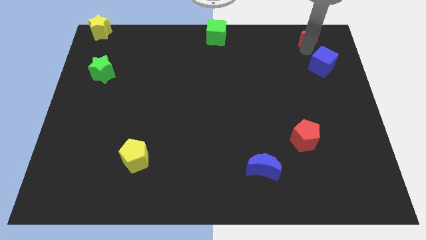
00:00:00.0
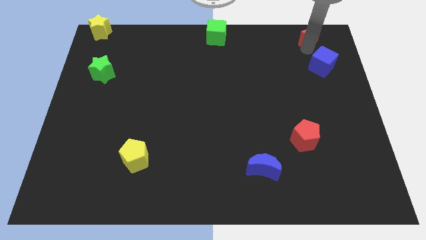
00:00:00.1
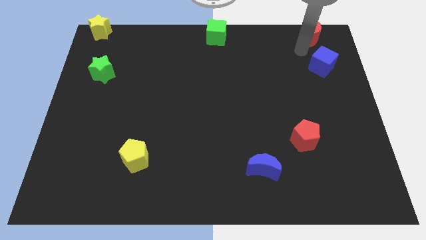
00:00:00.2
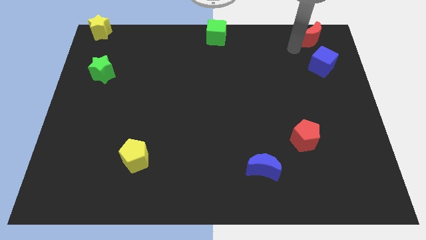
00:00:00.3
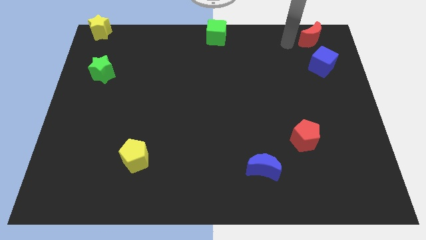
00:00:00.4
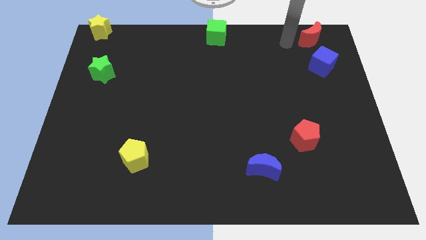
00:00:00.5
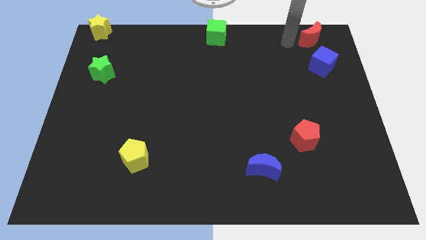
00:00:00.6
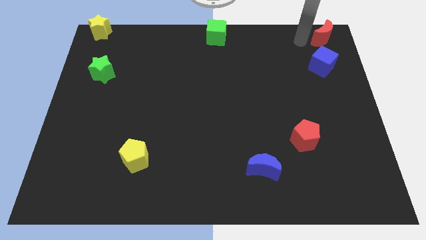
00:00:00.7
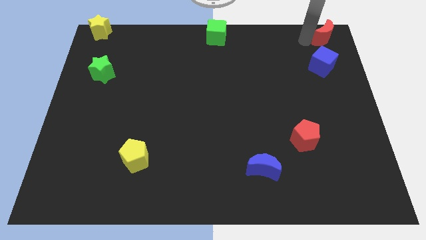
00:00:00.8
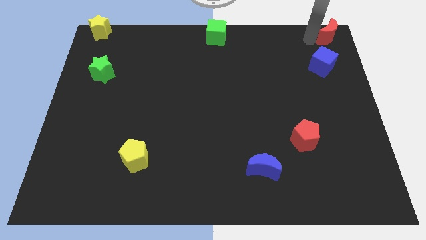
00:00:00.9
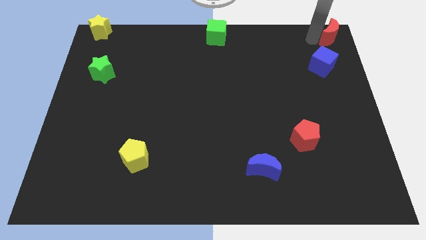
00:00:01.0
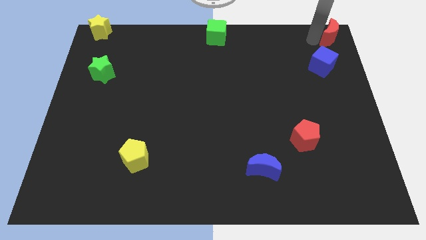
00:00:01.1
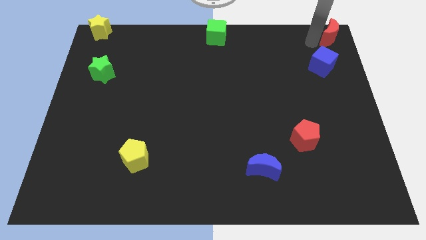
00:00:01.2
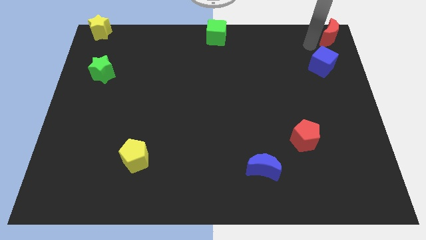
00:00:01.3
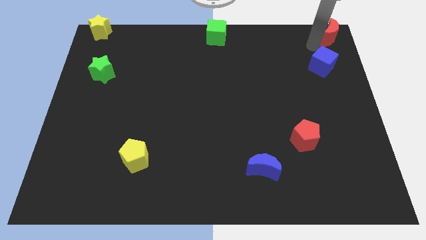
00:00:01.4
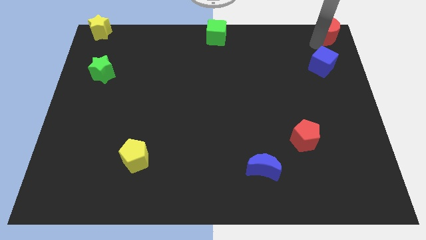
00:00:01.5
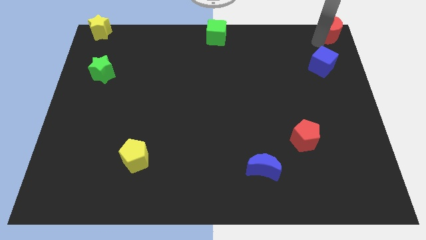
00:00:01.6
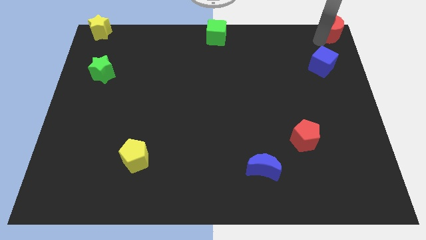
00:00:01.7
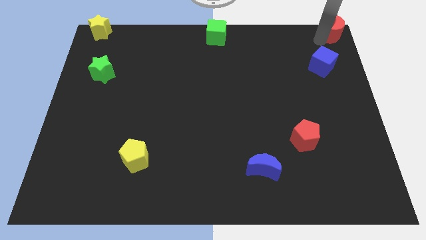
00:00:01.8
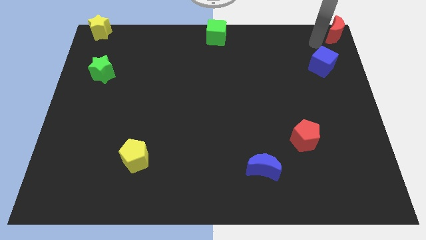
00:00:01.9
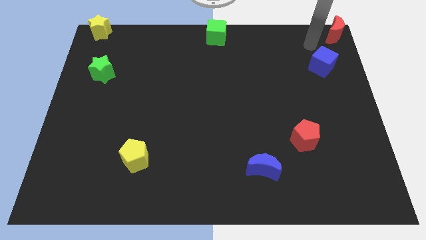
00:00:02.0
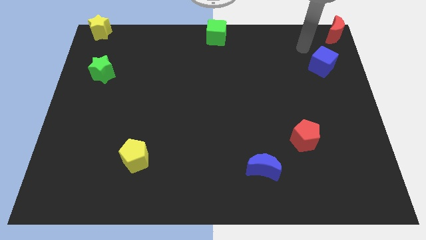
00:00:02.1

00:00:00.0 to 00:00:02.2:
push the red moon to the top right corner of the board

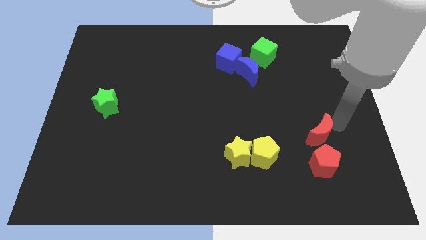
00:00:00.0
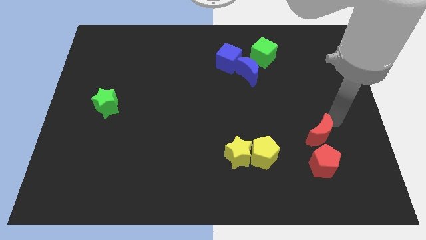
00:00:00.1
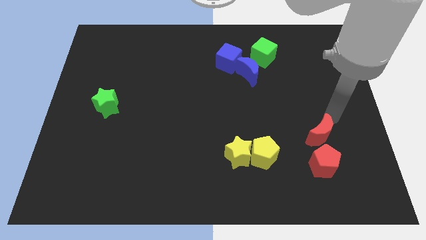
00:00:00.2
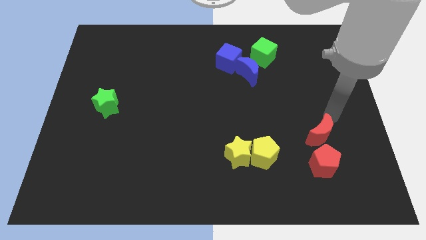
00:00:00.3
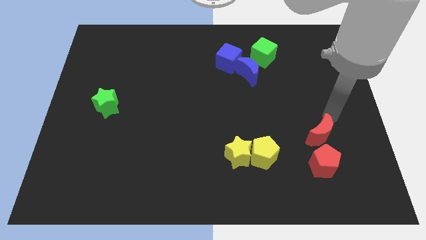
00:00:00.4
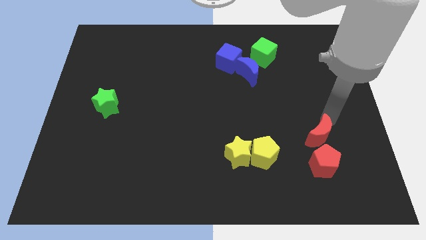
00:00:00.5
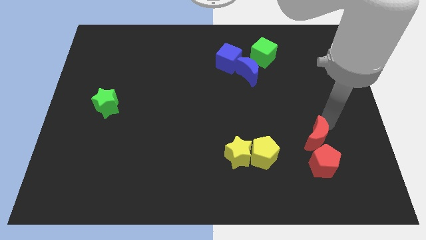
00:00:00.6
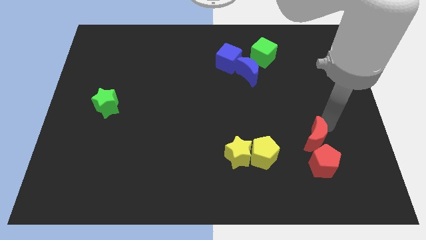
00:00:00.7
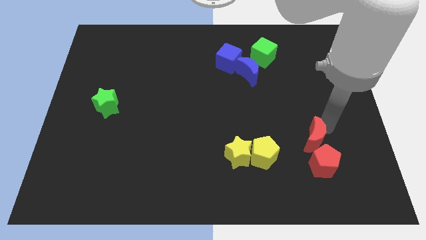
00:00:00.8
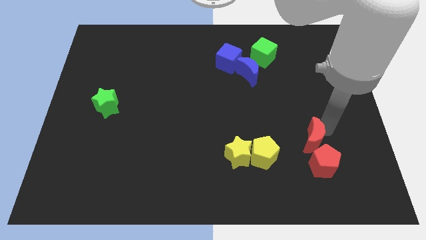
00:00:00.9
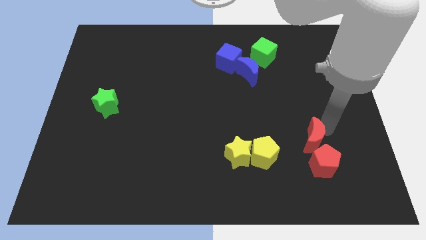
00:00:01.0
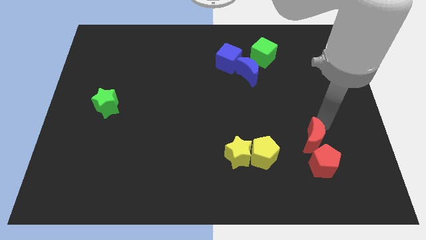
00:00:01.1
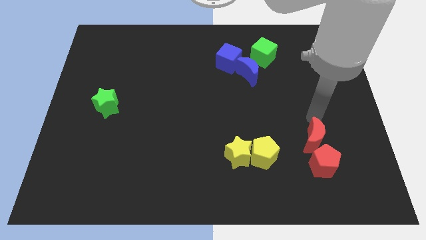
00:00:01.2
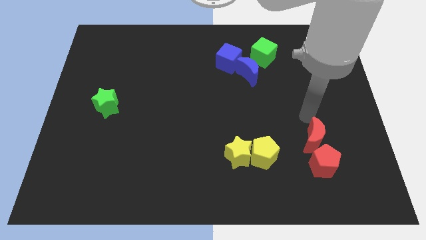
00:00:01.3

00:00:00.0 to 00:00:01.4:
slightly touch the red crescent

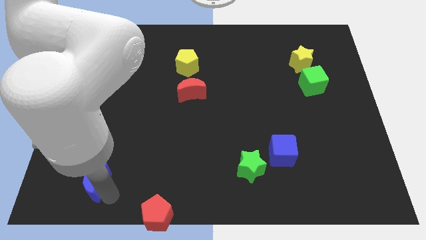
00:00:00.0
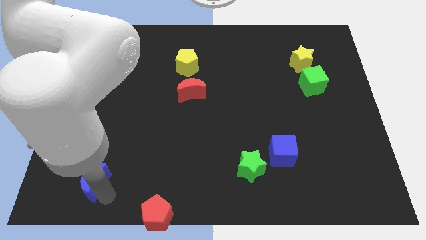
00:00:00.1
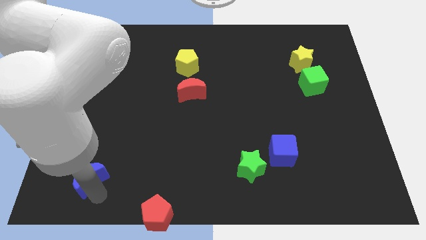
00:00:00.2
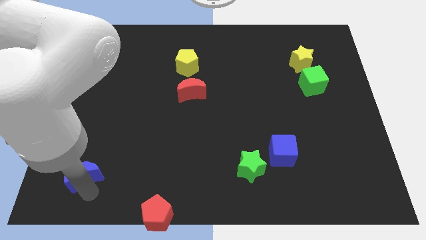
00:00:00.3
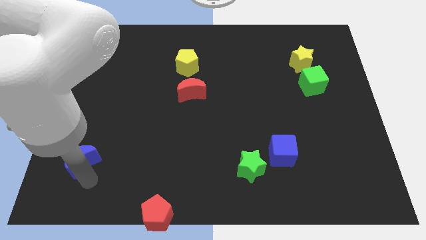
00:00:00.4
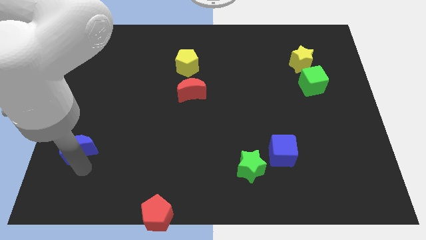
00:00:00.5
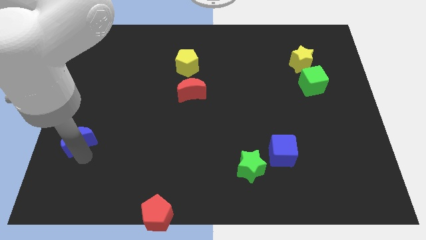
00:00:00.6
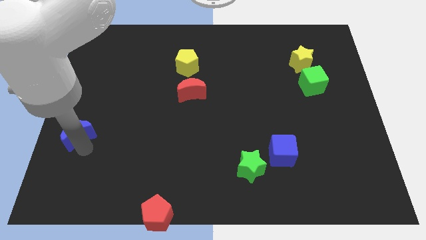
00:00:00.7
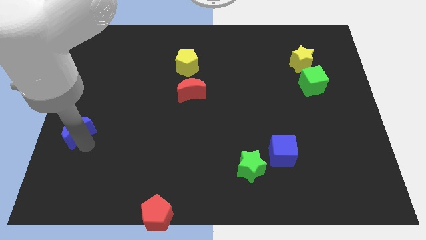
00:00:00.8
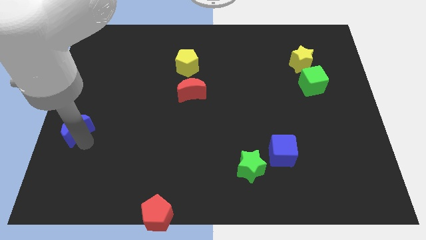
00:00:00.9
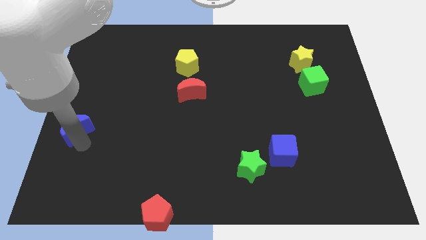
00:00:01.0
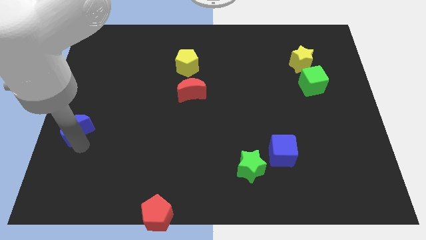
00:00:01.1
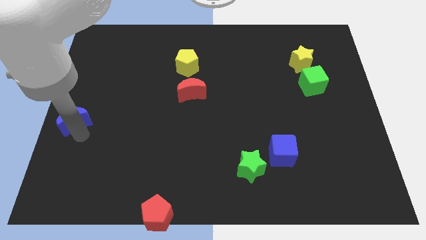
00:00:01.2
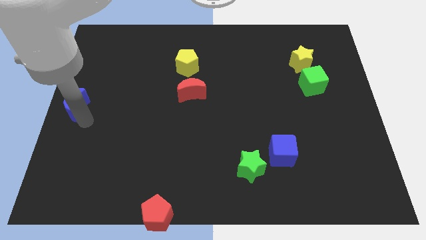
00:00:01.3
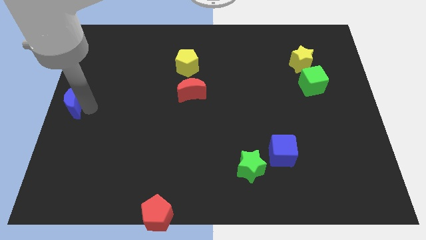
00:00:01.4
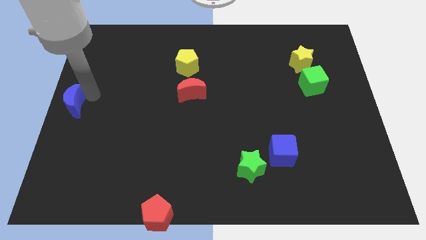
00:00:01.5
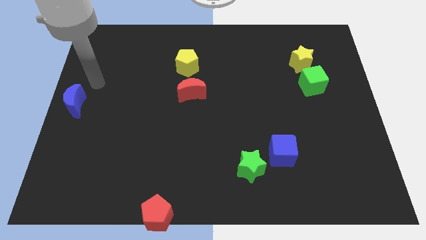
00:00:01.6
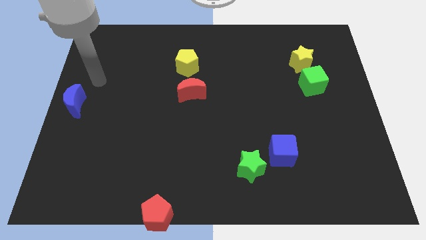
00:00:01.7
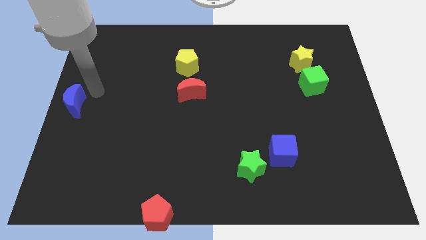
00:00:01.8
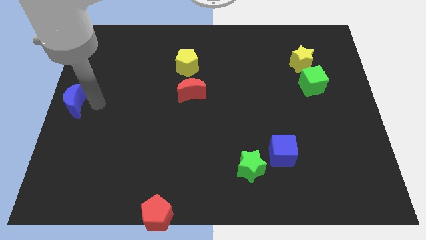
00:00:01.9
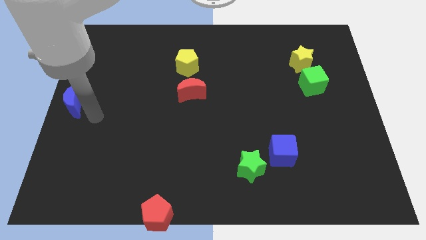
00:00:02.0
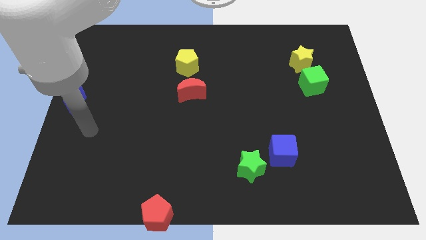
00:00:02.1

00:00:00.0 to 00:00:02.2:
push the blue crescent to the centre left of the board

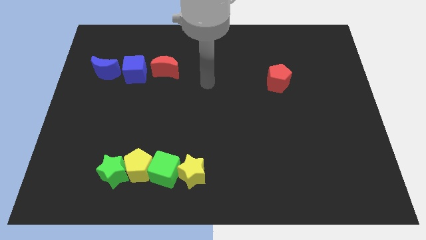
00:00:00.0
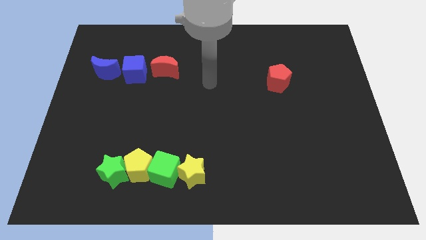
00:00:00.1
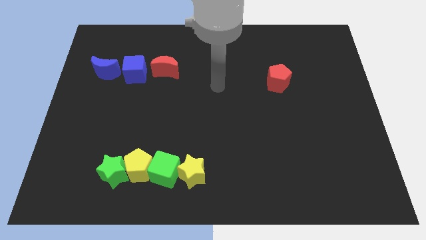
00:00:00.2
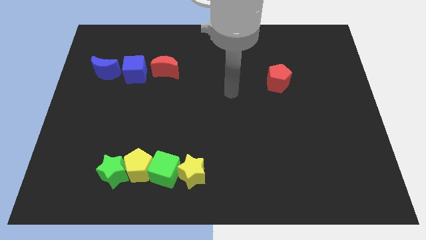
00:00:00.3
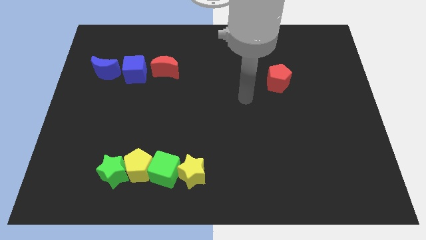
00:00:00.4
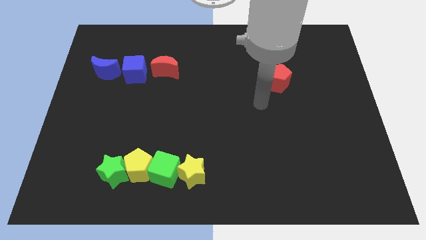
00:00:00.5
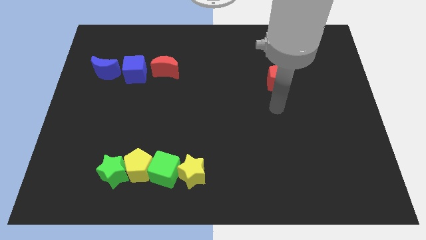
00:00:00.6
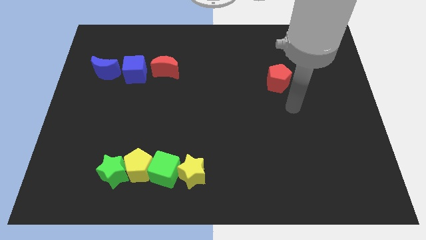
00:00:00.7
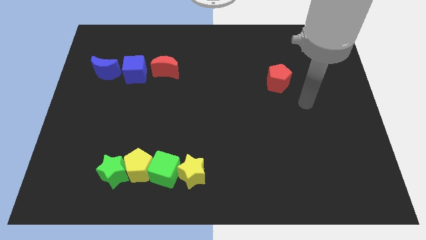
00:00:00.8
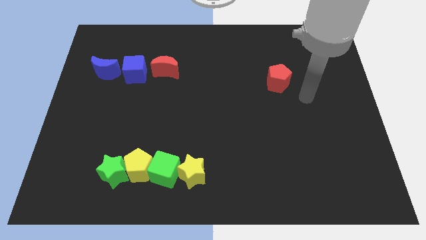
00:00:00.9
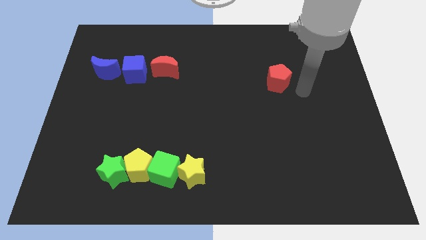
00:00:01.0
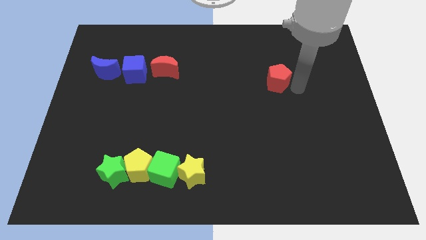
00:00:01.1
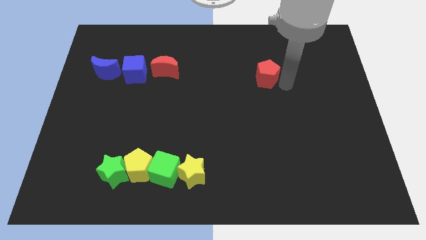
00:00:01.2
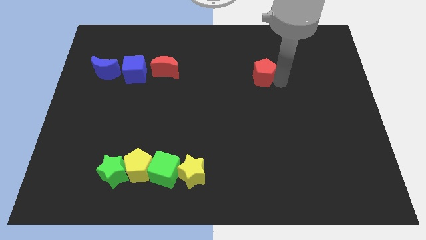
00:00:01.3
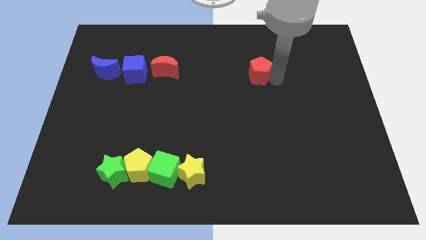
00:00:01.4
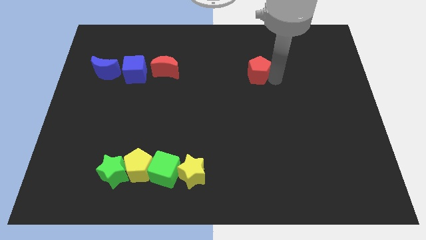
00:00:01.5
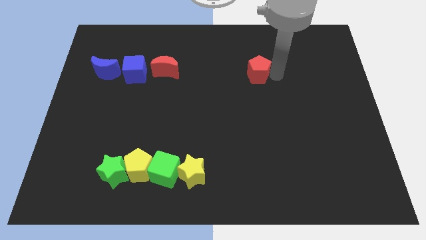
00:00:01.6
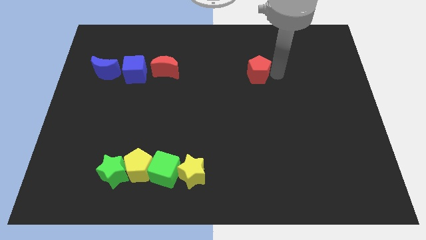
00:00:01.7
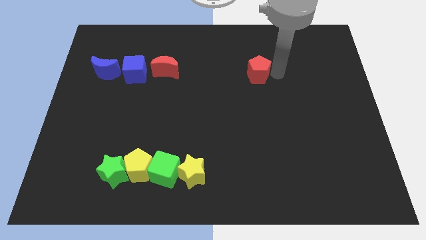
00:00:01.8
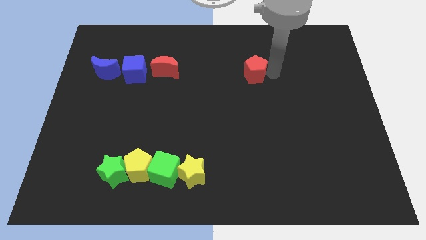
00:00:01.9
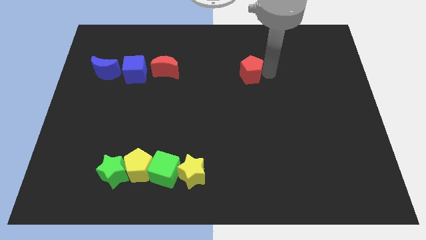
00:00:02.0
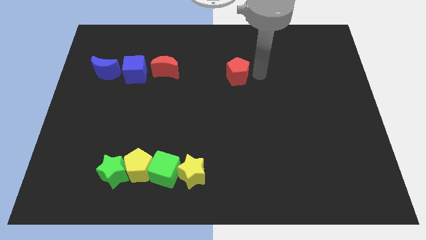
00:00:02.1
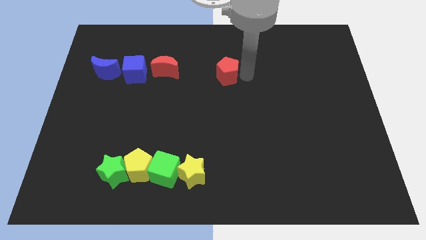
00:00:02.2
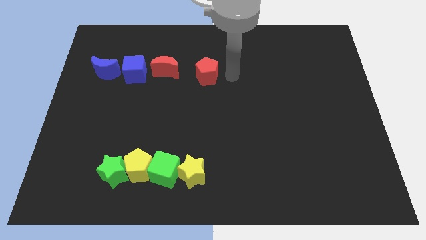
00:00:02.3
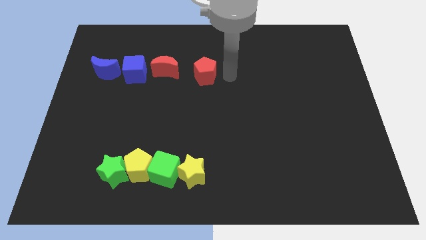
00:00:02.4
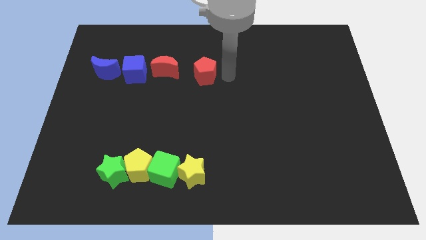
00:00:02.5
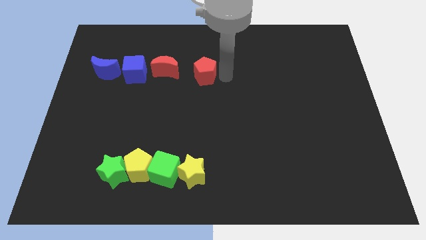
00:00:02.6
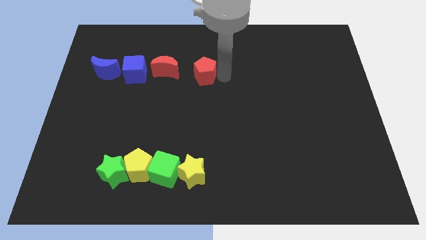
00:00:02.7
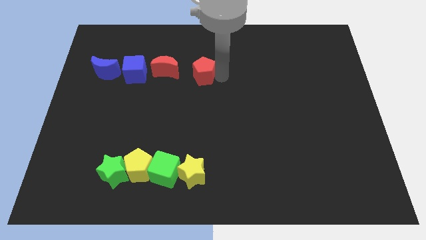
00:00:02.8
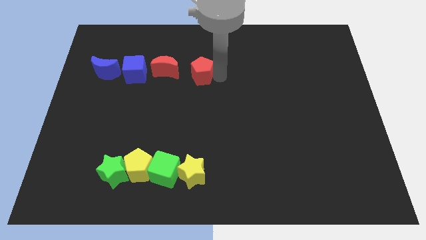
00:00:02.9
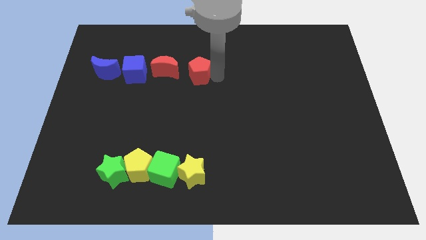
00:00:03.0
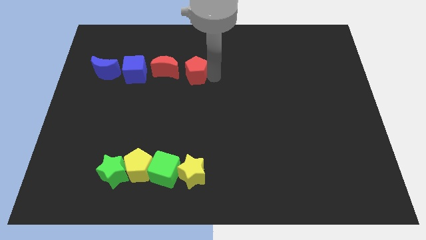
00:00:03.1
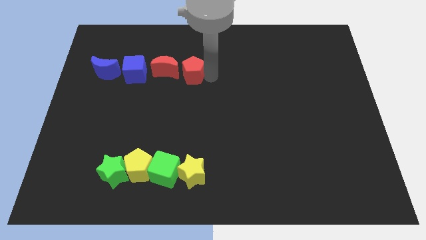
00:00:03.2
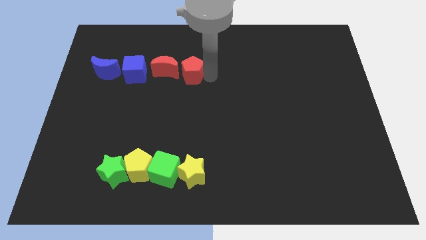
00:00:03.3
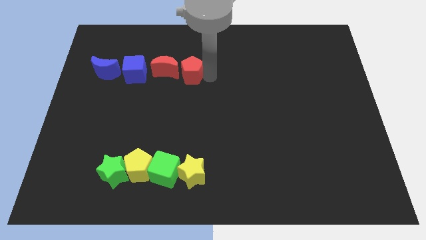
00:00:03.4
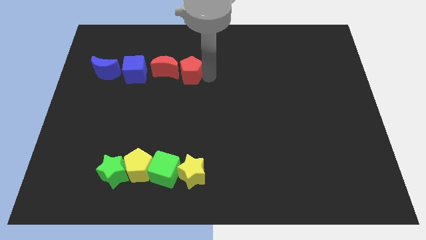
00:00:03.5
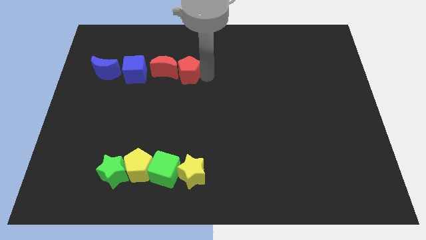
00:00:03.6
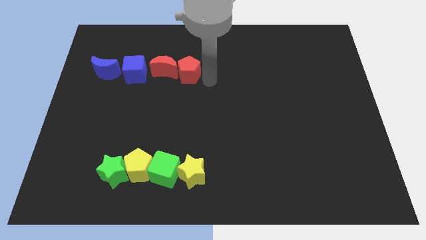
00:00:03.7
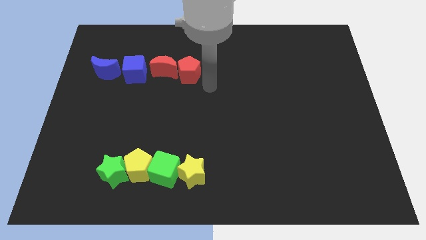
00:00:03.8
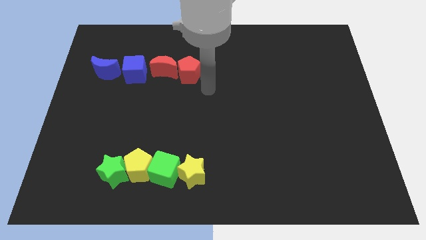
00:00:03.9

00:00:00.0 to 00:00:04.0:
move the red pentagon close to the right side of the red crescent
